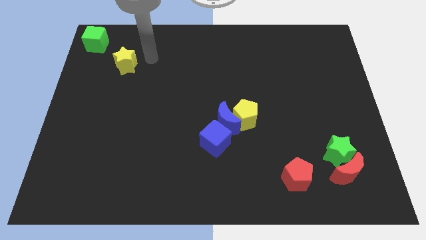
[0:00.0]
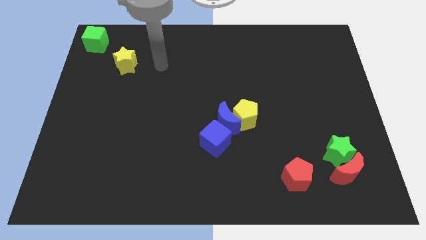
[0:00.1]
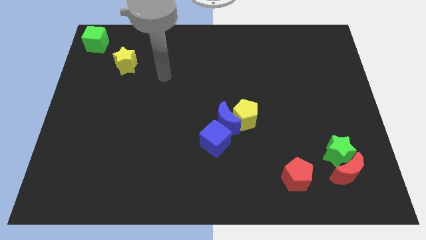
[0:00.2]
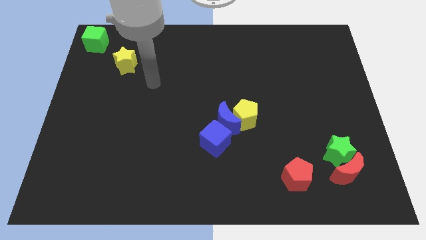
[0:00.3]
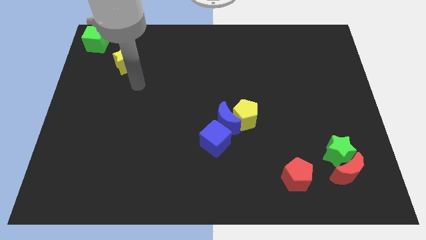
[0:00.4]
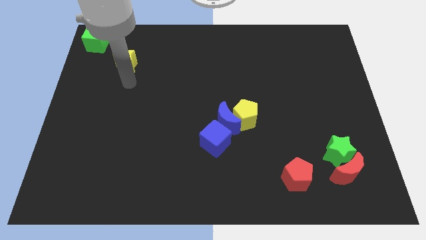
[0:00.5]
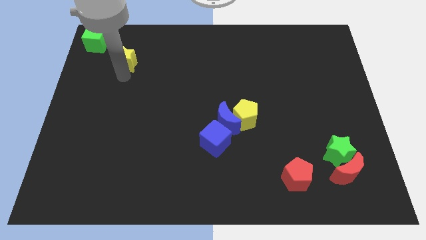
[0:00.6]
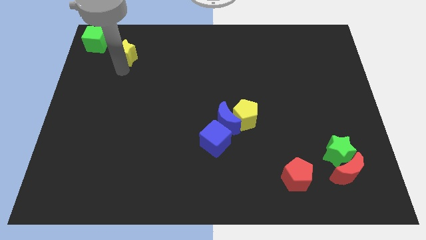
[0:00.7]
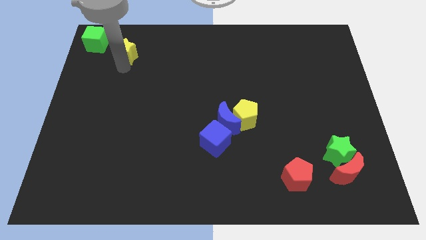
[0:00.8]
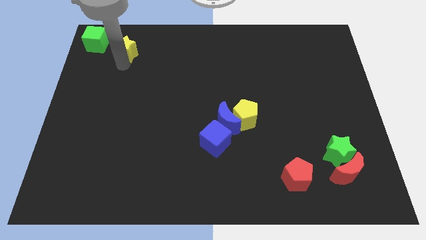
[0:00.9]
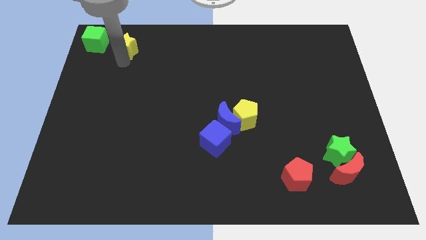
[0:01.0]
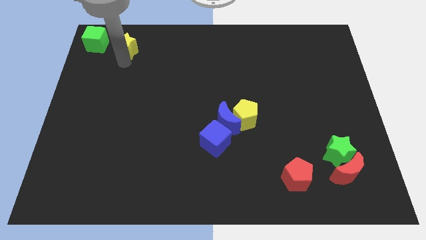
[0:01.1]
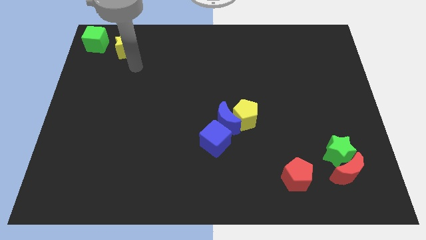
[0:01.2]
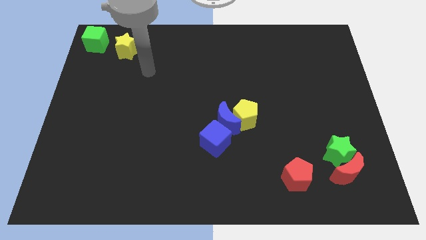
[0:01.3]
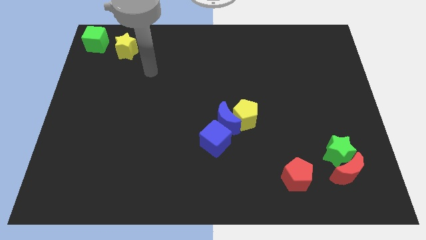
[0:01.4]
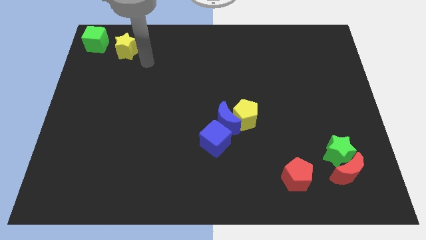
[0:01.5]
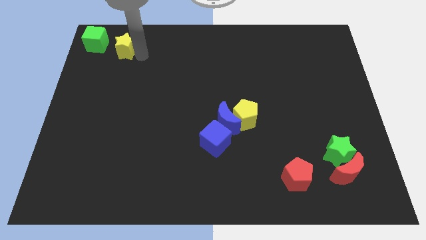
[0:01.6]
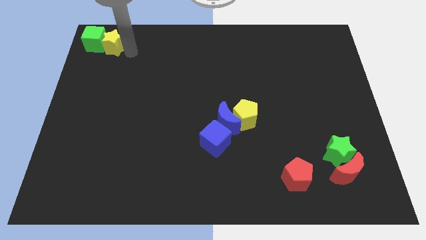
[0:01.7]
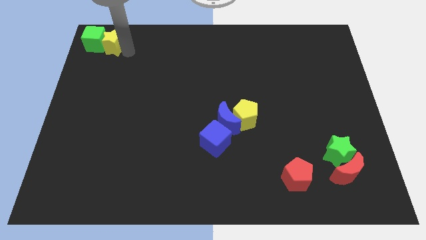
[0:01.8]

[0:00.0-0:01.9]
move the yellow star right side of the green cube

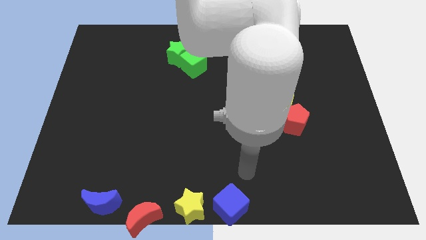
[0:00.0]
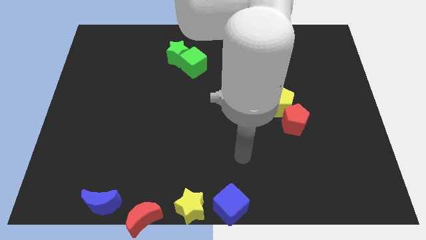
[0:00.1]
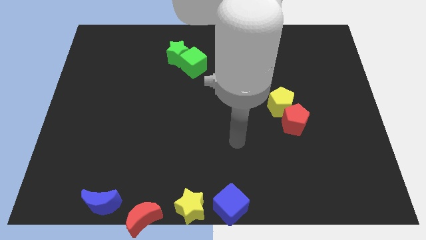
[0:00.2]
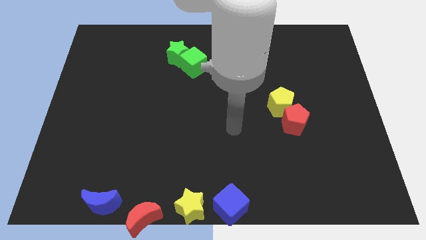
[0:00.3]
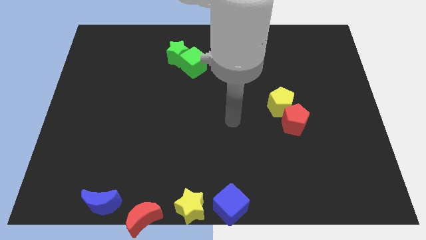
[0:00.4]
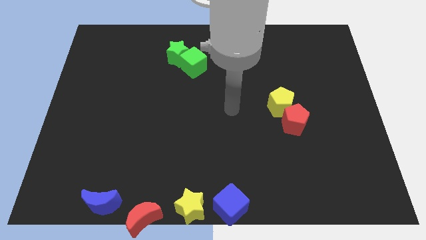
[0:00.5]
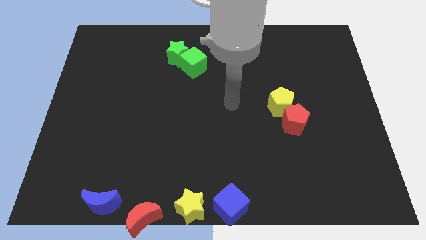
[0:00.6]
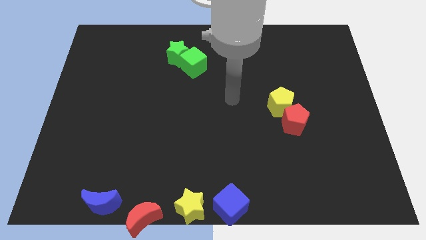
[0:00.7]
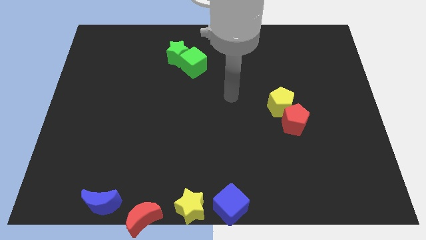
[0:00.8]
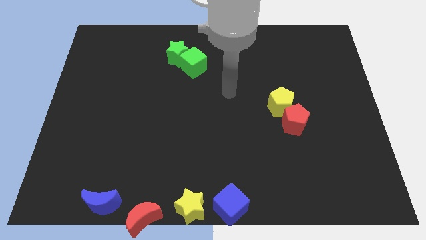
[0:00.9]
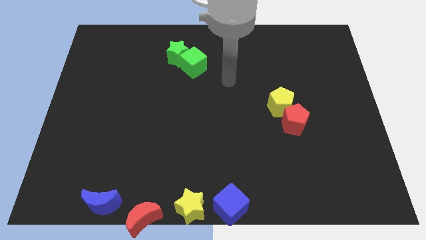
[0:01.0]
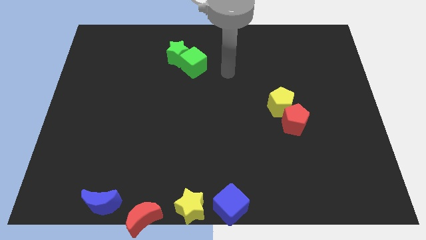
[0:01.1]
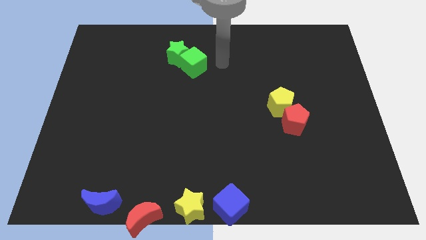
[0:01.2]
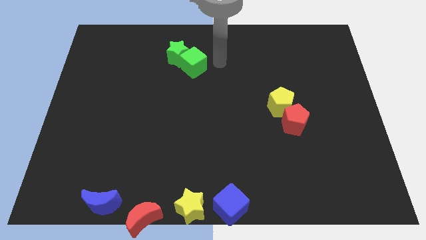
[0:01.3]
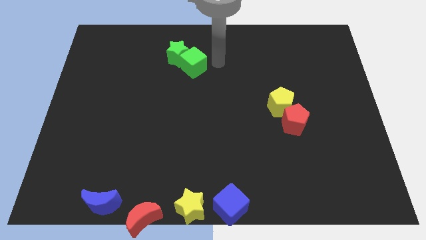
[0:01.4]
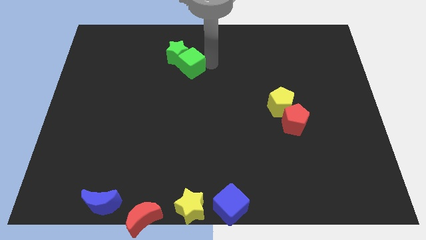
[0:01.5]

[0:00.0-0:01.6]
move the arm away from the blue cube

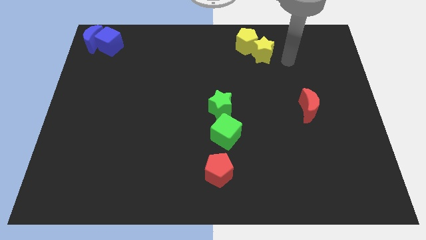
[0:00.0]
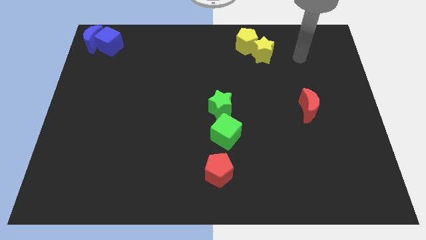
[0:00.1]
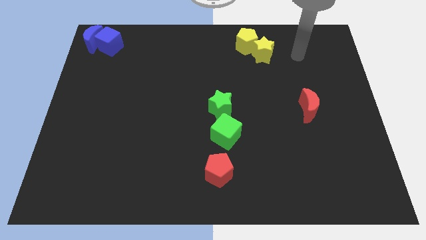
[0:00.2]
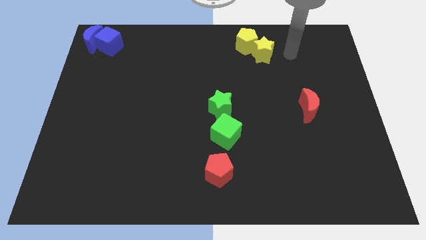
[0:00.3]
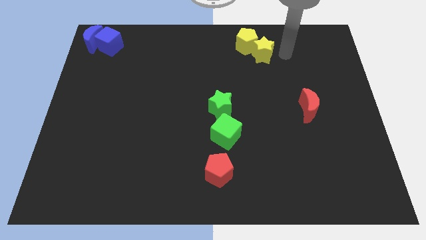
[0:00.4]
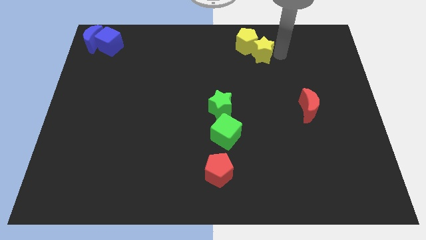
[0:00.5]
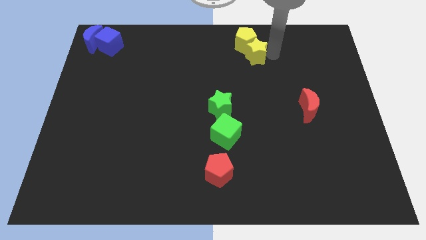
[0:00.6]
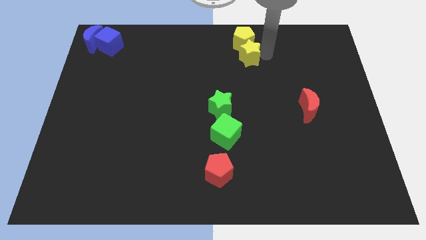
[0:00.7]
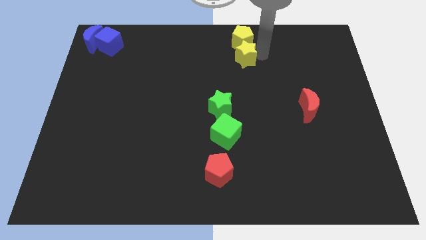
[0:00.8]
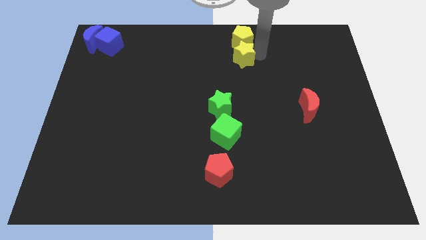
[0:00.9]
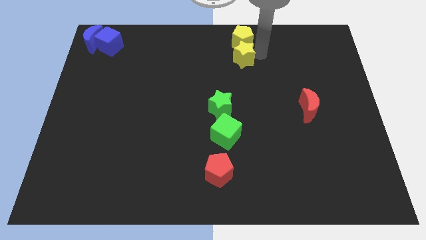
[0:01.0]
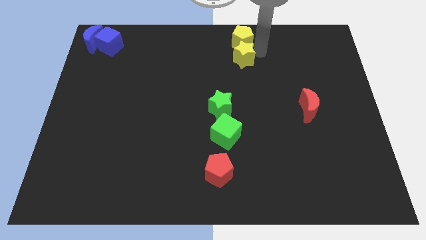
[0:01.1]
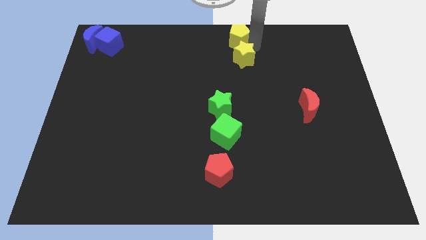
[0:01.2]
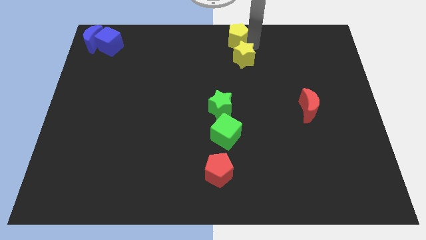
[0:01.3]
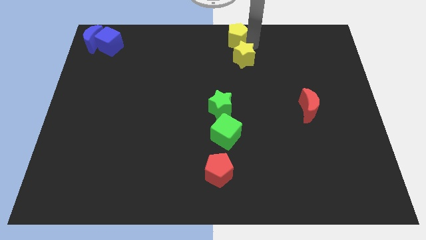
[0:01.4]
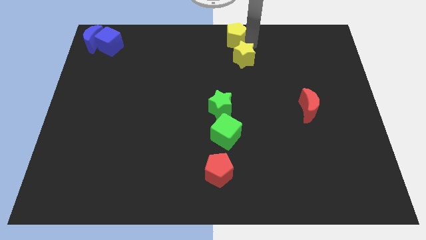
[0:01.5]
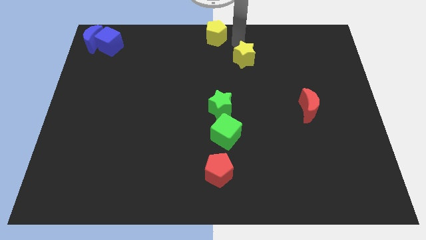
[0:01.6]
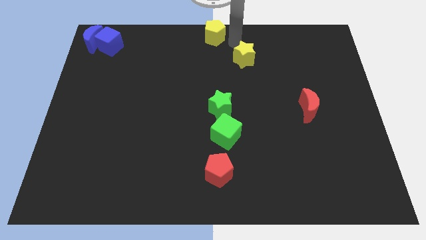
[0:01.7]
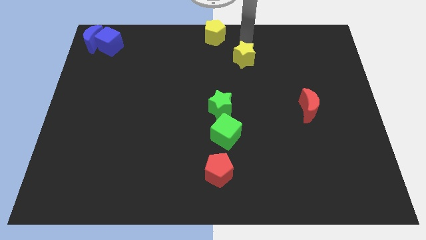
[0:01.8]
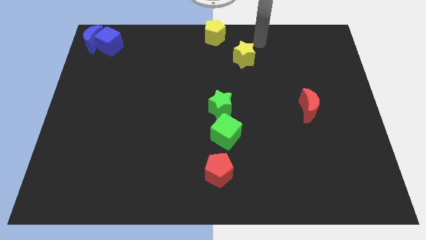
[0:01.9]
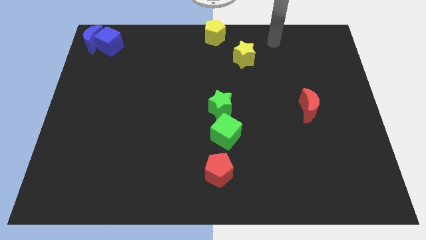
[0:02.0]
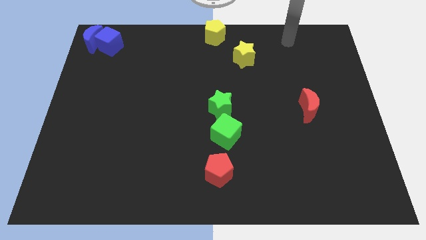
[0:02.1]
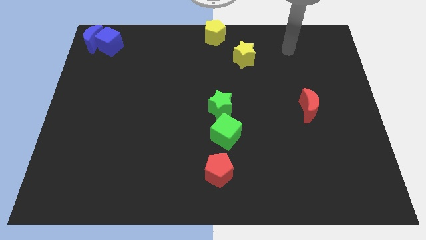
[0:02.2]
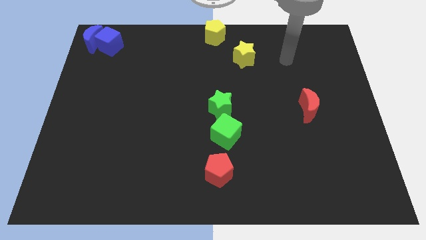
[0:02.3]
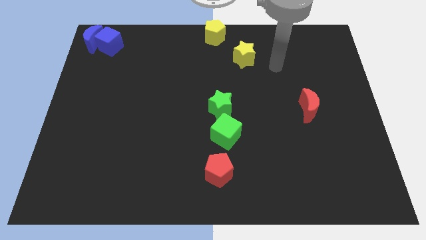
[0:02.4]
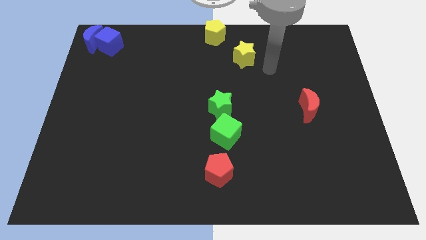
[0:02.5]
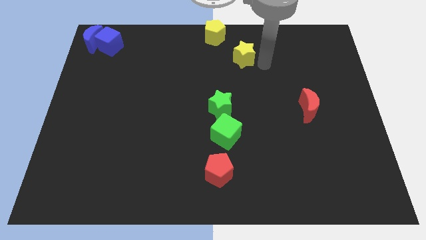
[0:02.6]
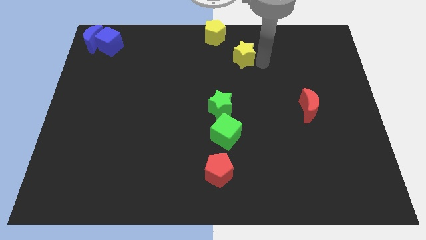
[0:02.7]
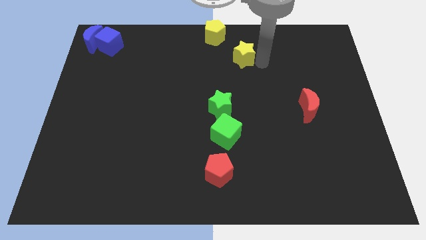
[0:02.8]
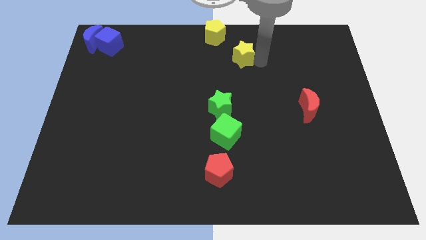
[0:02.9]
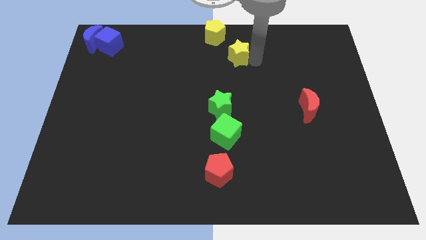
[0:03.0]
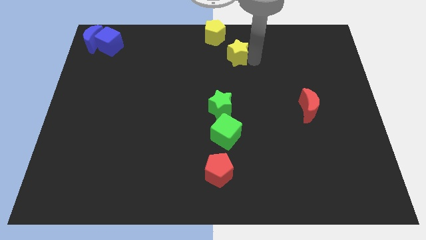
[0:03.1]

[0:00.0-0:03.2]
place the yellow pentagon yellow star to the center

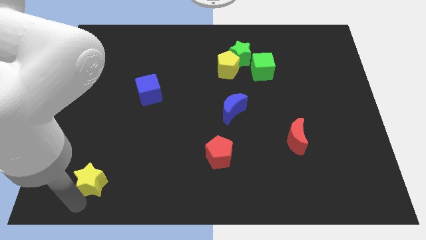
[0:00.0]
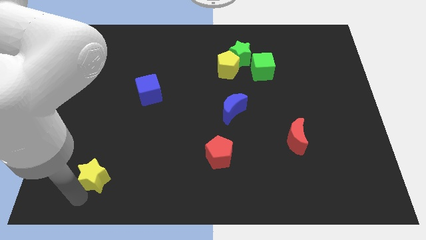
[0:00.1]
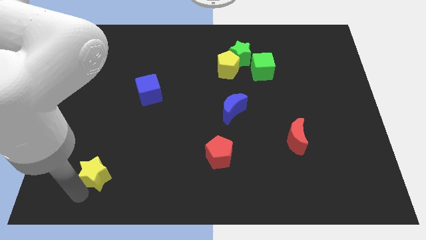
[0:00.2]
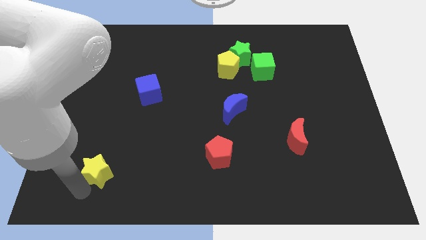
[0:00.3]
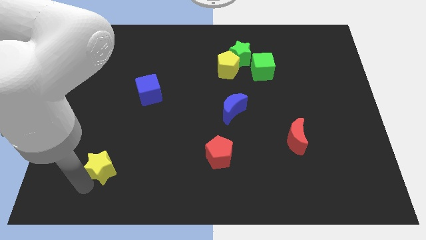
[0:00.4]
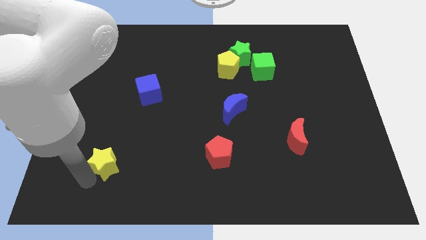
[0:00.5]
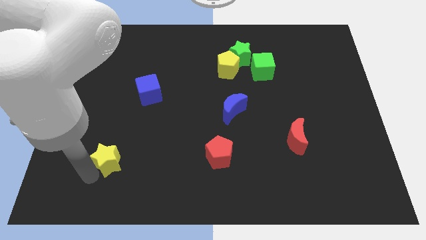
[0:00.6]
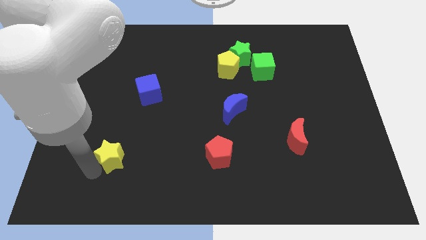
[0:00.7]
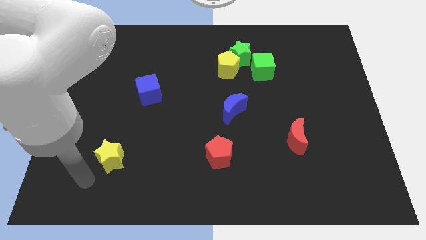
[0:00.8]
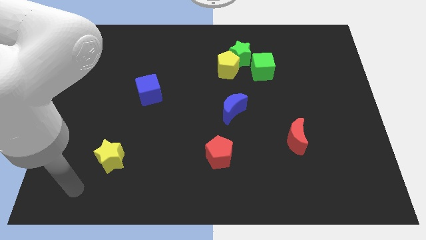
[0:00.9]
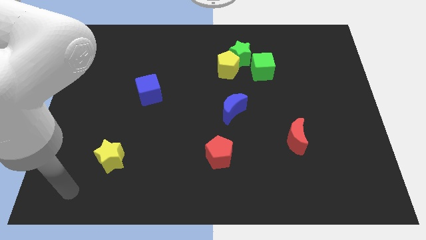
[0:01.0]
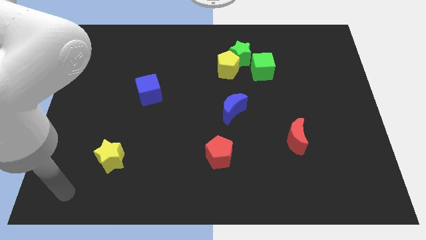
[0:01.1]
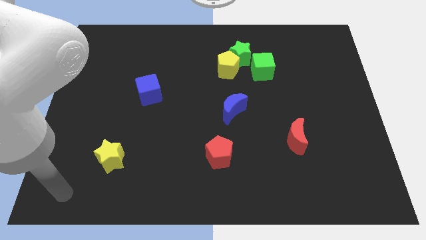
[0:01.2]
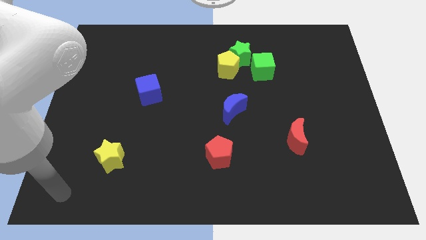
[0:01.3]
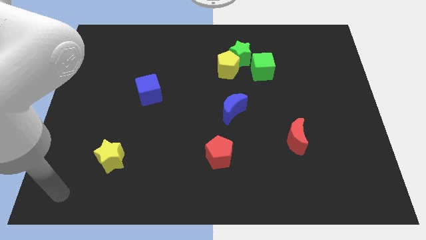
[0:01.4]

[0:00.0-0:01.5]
place the yellow star horizontally left to the red pentagon

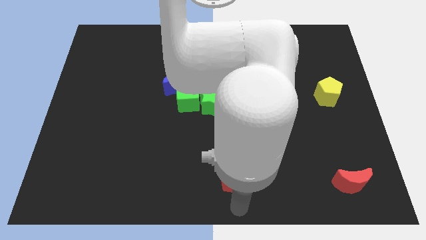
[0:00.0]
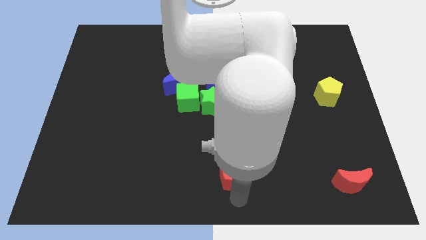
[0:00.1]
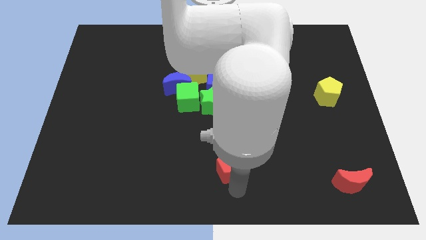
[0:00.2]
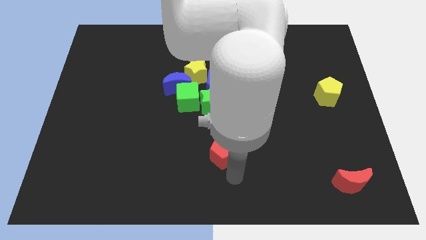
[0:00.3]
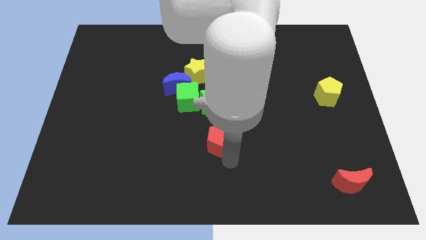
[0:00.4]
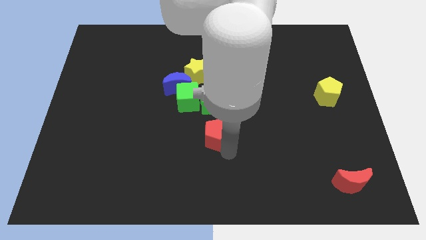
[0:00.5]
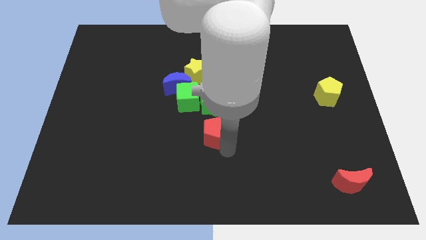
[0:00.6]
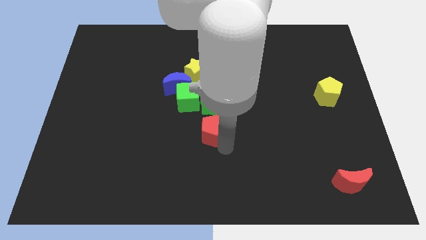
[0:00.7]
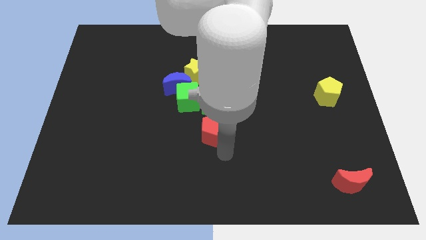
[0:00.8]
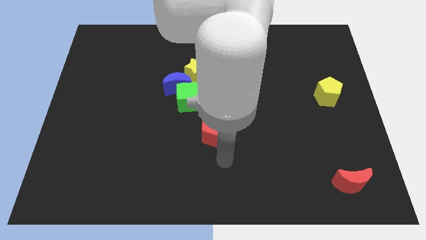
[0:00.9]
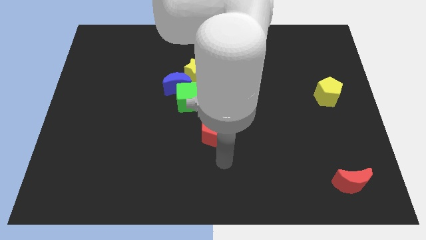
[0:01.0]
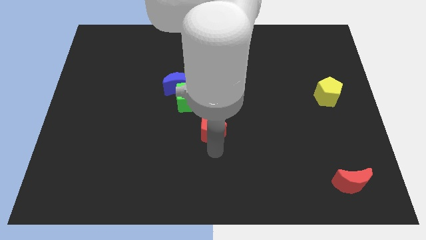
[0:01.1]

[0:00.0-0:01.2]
slide the red pentagon to the bottom side of the green star
